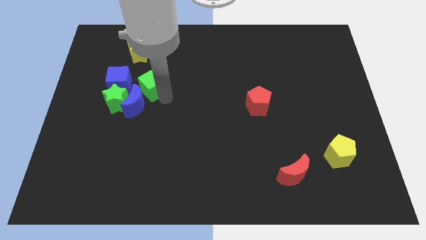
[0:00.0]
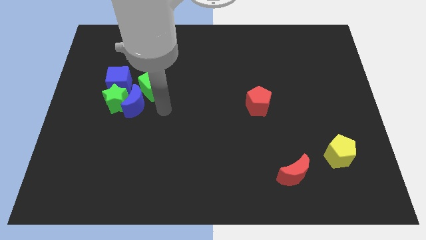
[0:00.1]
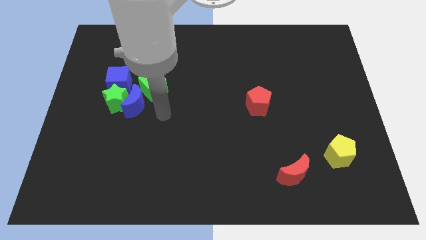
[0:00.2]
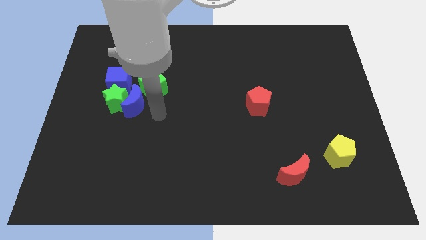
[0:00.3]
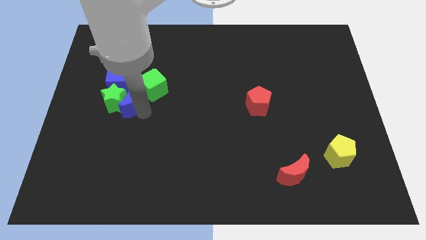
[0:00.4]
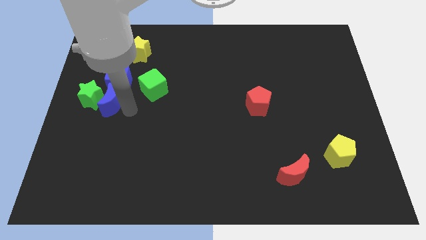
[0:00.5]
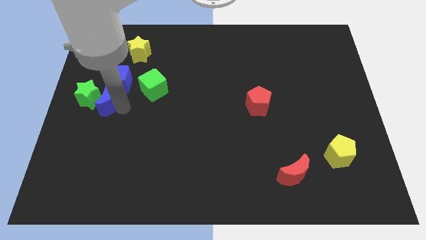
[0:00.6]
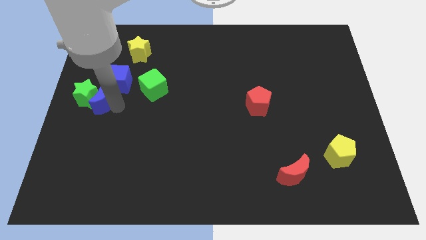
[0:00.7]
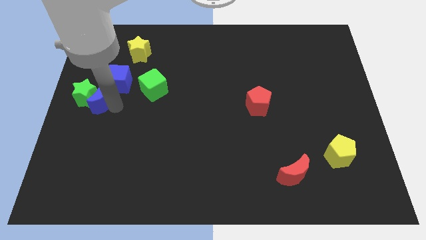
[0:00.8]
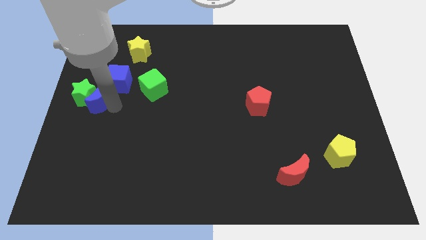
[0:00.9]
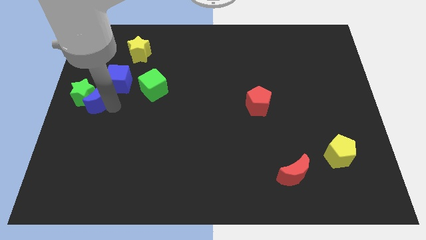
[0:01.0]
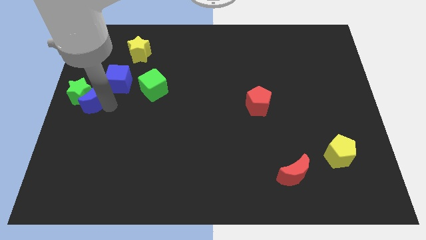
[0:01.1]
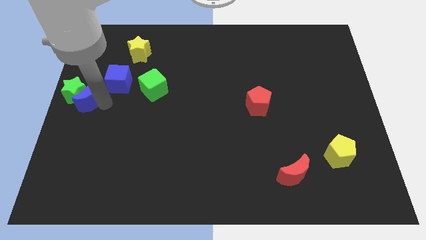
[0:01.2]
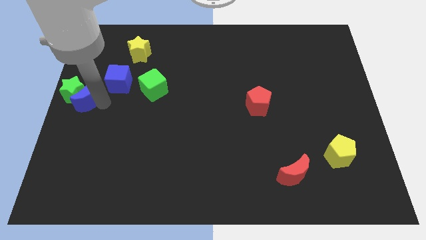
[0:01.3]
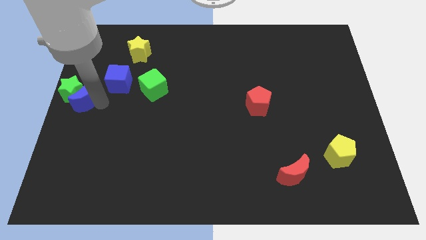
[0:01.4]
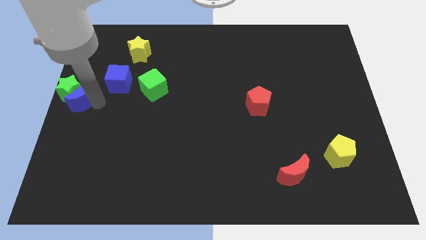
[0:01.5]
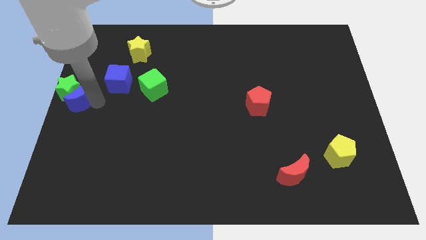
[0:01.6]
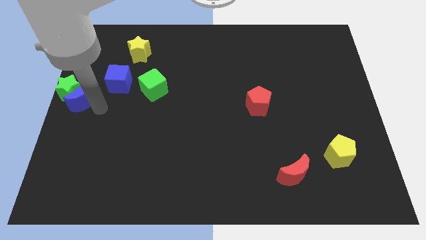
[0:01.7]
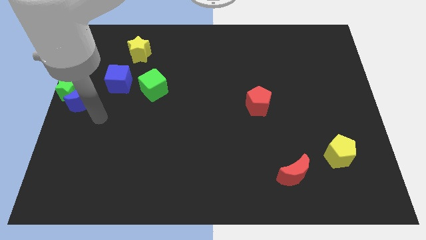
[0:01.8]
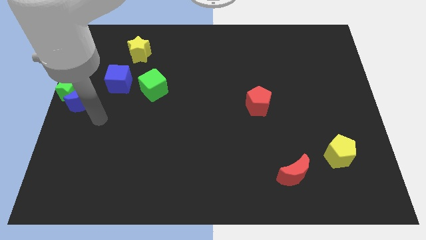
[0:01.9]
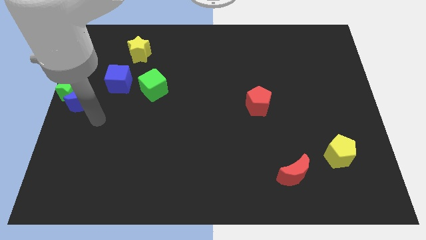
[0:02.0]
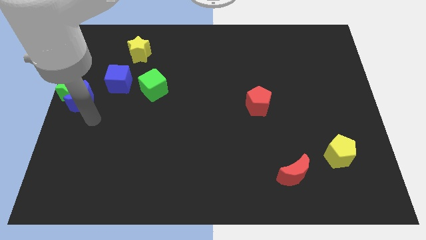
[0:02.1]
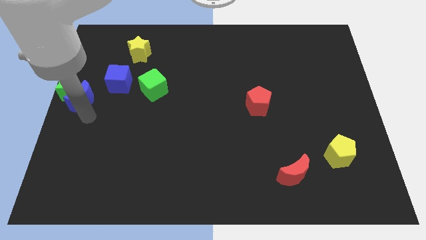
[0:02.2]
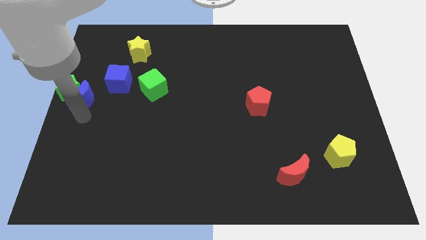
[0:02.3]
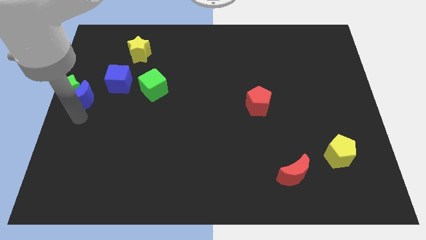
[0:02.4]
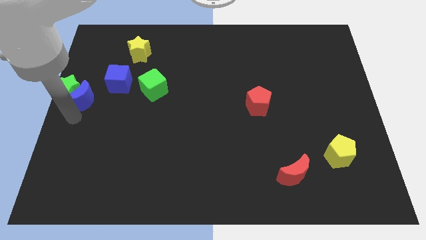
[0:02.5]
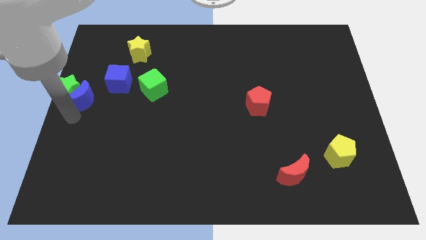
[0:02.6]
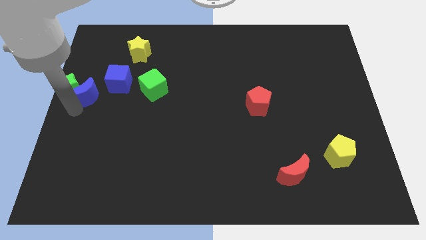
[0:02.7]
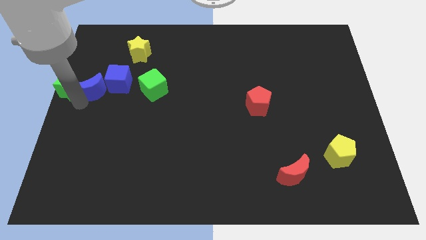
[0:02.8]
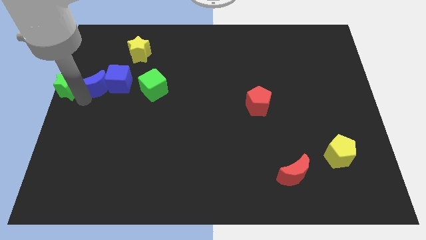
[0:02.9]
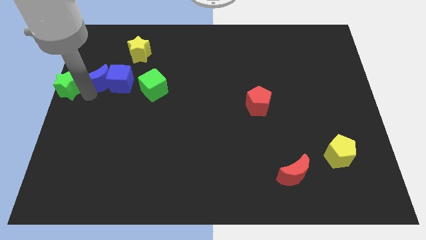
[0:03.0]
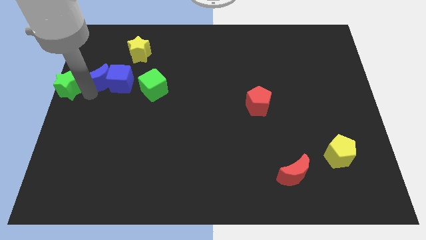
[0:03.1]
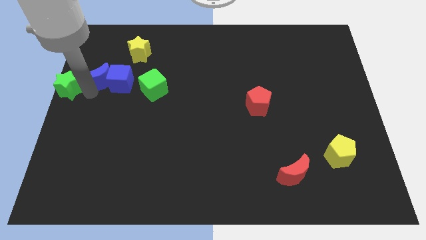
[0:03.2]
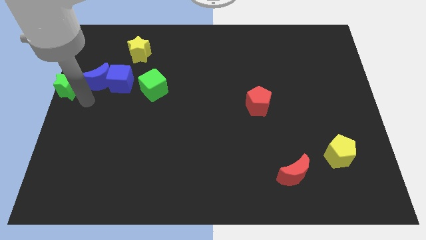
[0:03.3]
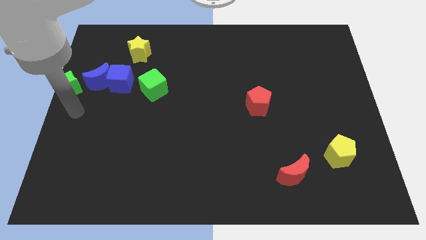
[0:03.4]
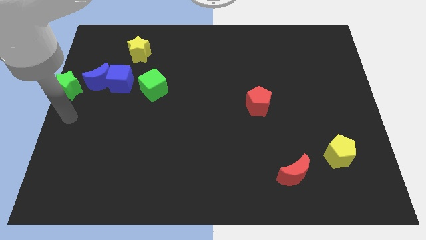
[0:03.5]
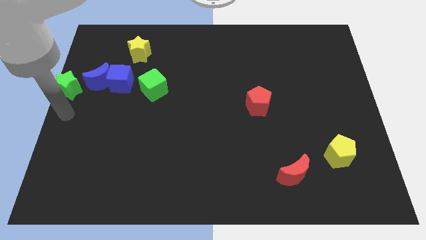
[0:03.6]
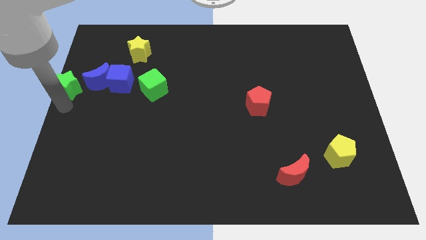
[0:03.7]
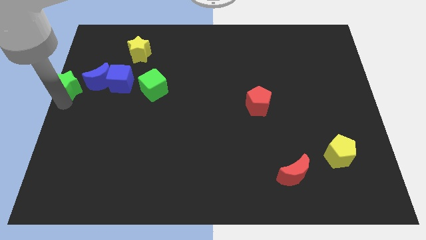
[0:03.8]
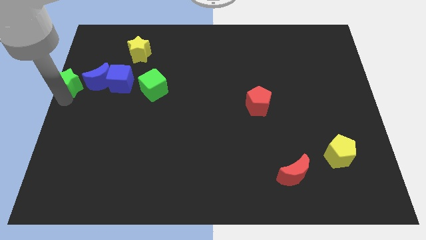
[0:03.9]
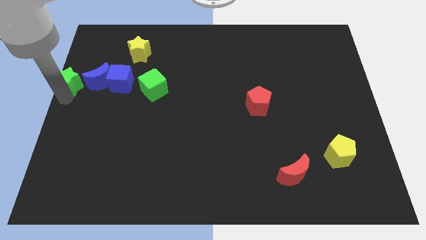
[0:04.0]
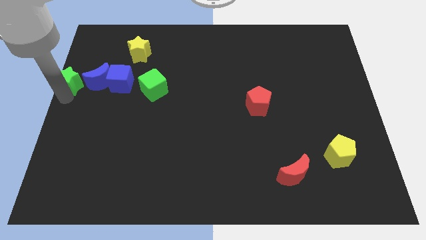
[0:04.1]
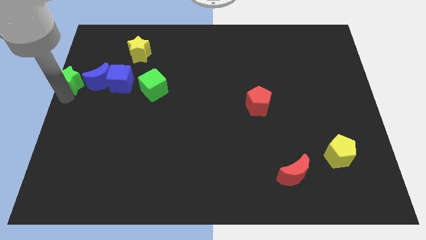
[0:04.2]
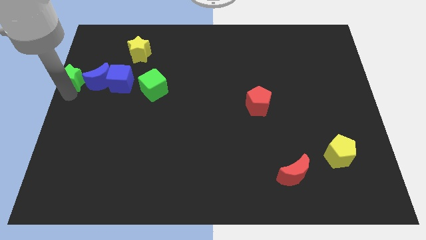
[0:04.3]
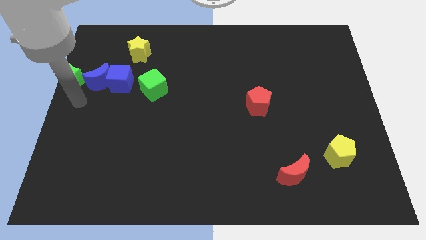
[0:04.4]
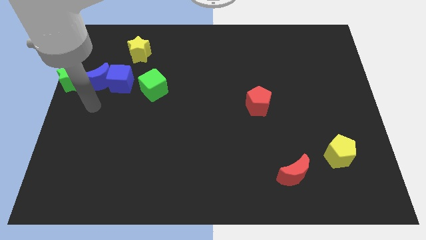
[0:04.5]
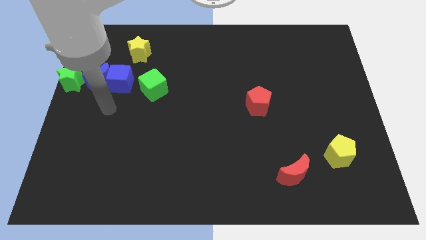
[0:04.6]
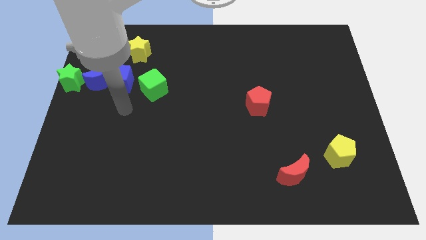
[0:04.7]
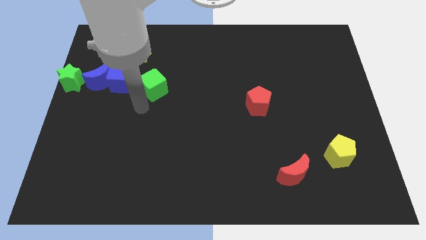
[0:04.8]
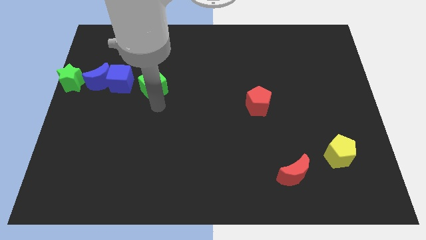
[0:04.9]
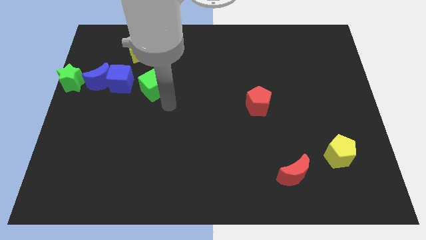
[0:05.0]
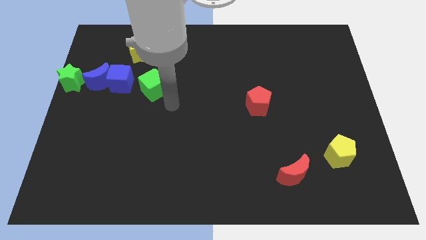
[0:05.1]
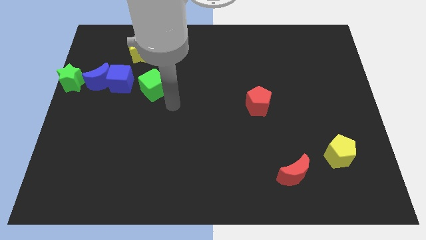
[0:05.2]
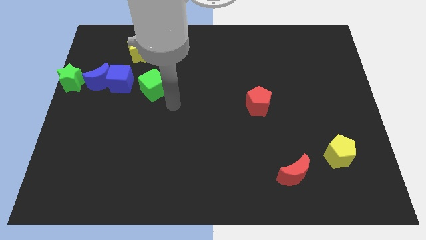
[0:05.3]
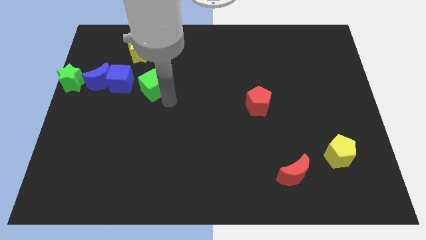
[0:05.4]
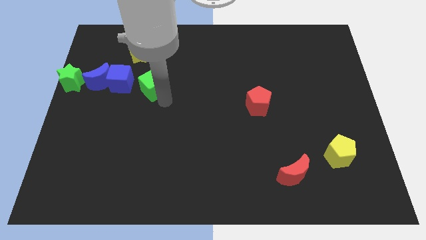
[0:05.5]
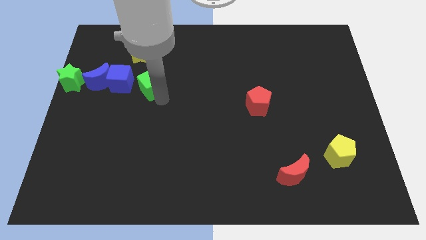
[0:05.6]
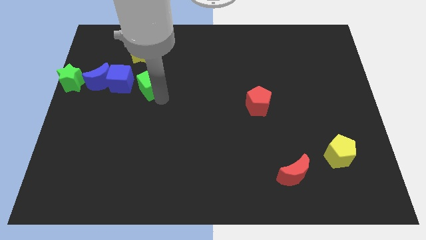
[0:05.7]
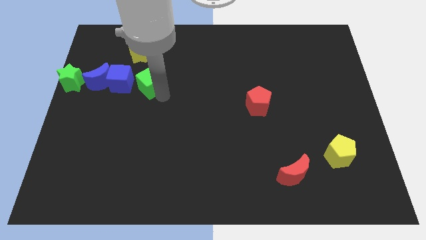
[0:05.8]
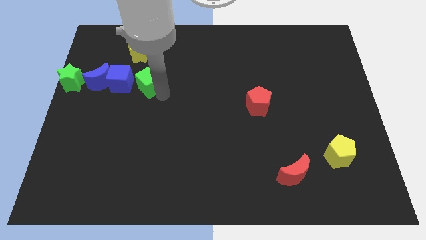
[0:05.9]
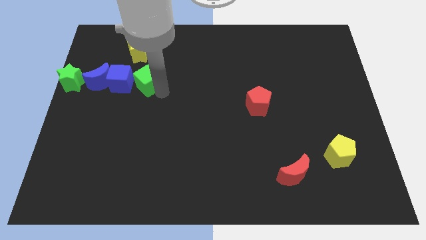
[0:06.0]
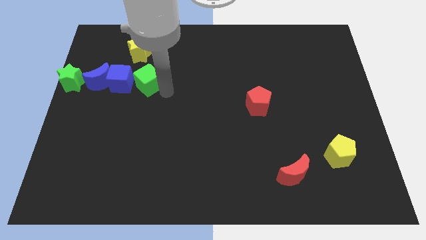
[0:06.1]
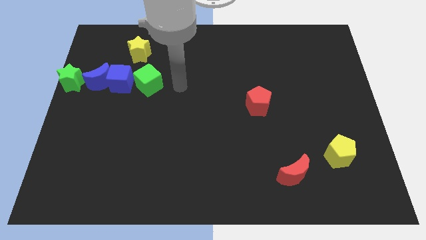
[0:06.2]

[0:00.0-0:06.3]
make a horizontal line with the green star blue crescent blue cube and green cube

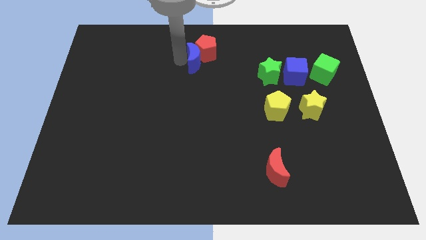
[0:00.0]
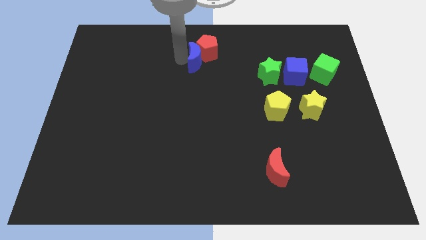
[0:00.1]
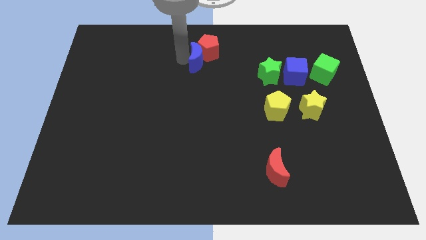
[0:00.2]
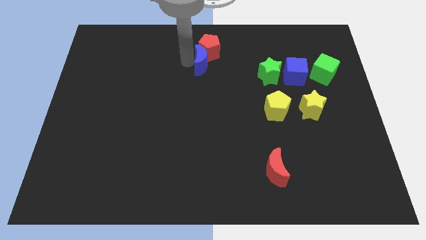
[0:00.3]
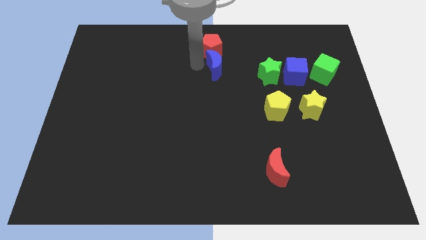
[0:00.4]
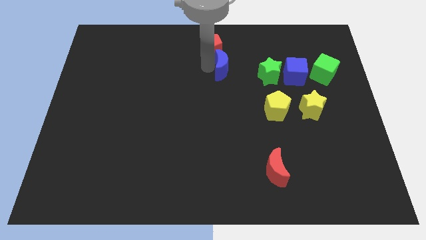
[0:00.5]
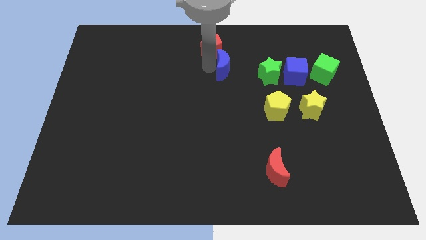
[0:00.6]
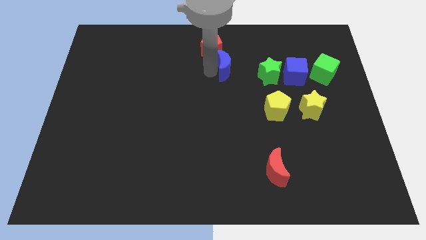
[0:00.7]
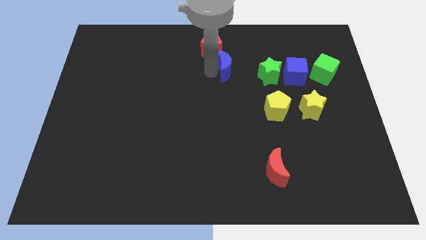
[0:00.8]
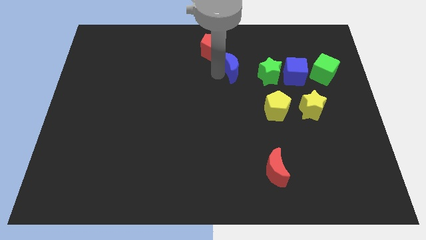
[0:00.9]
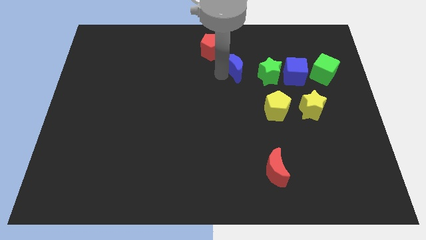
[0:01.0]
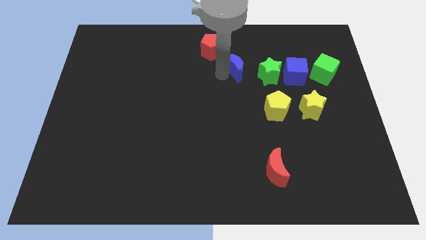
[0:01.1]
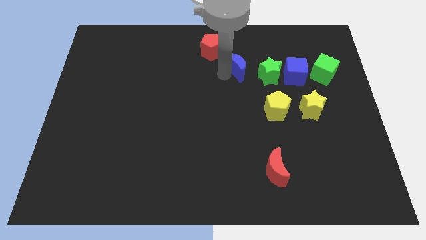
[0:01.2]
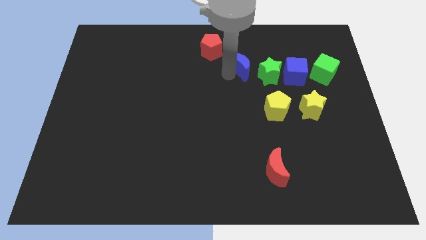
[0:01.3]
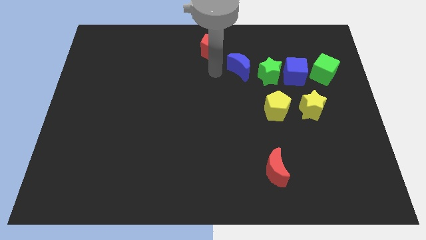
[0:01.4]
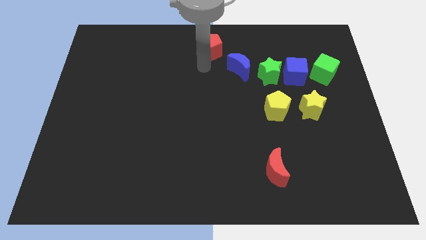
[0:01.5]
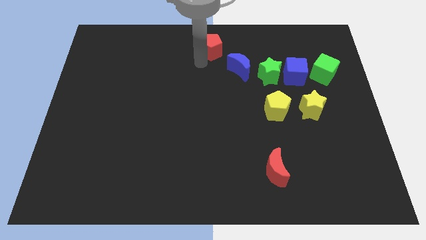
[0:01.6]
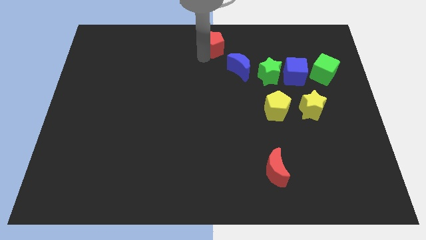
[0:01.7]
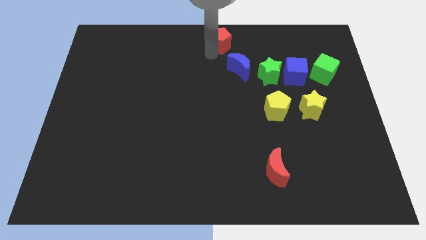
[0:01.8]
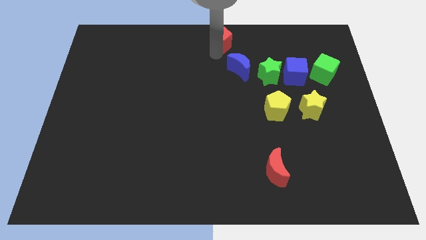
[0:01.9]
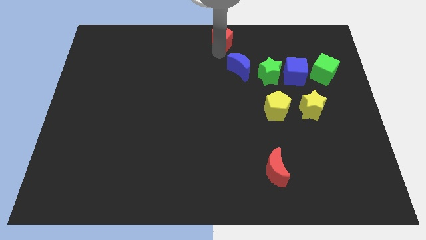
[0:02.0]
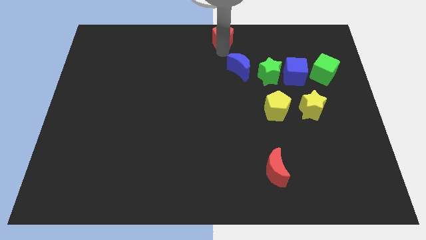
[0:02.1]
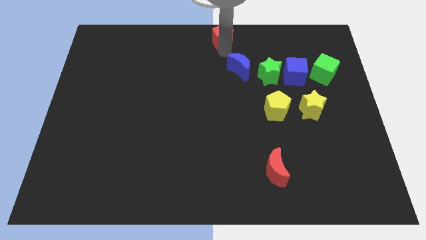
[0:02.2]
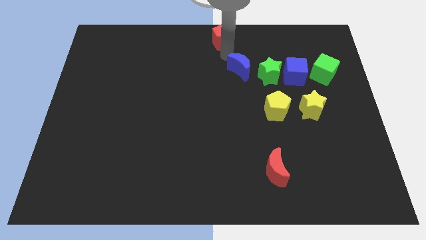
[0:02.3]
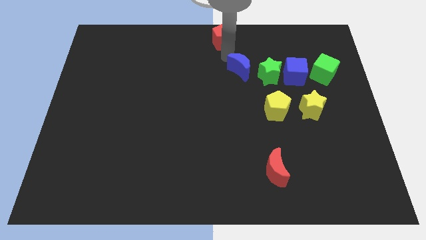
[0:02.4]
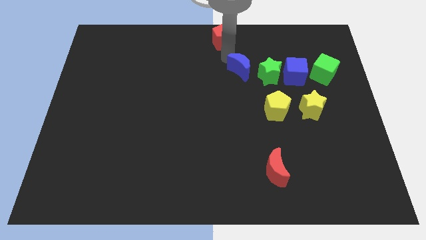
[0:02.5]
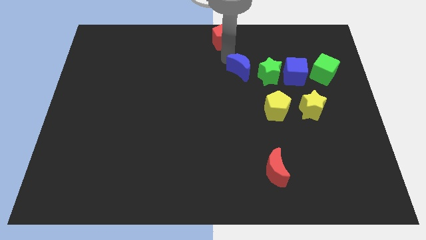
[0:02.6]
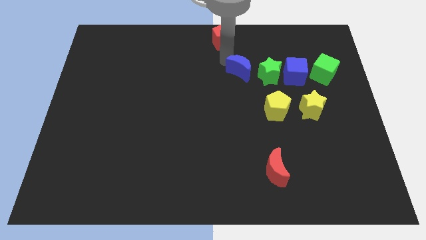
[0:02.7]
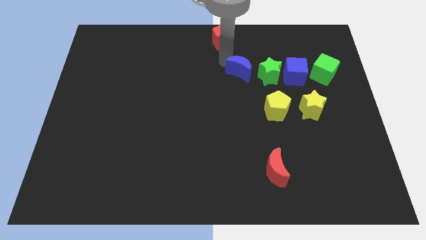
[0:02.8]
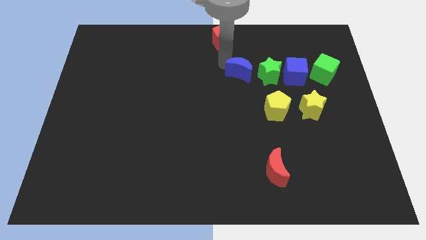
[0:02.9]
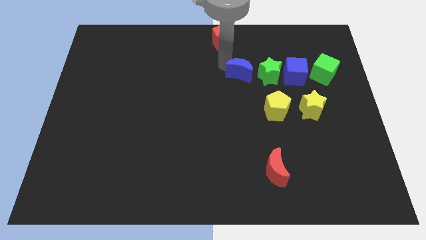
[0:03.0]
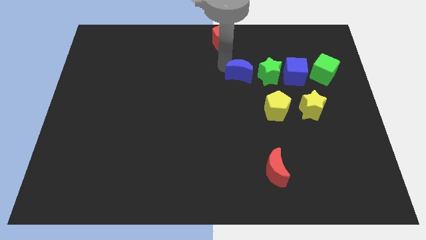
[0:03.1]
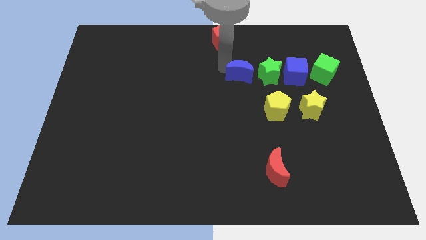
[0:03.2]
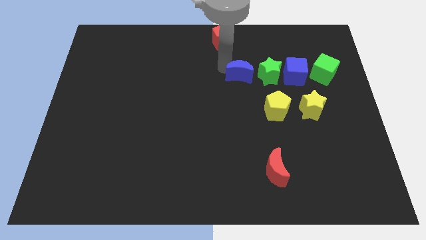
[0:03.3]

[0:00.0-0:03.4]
push blue crescent towards green star
